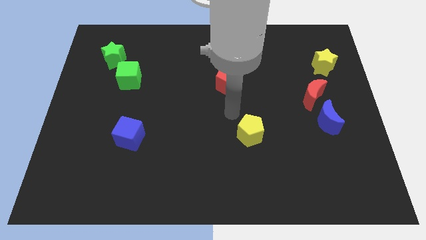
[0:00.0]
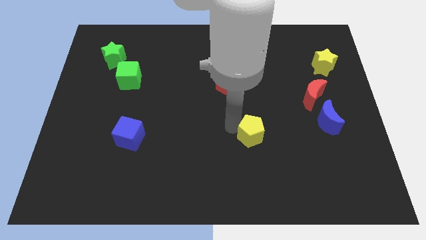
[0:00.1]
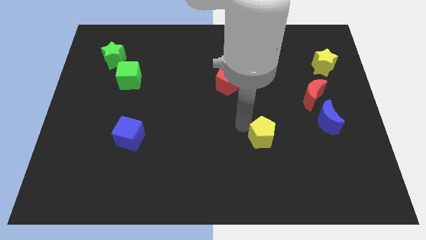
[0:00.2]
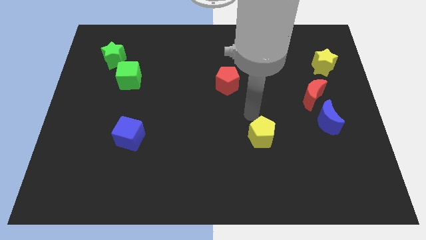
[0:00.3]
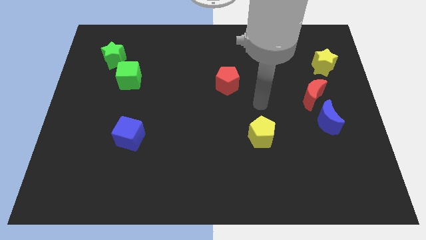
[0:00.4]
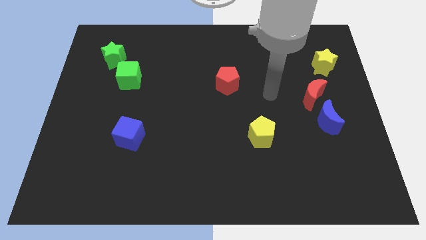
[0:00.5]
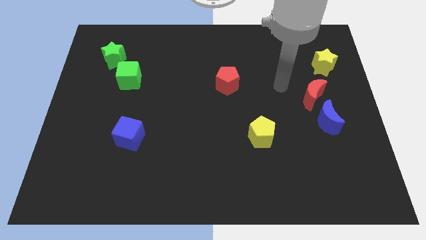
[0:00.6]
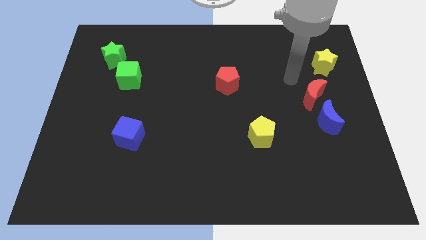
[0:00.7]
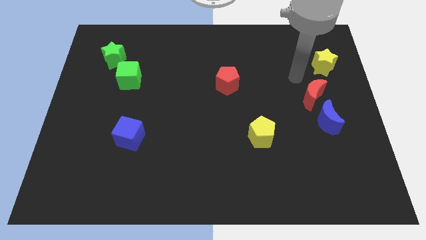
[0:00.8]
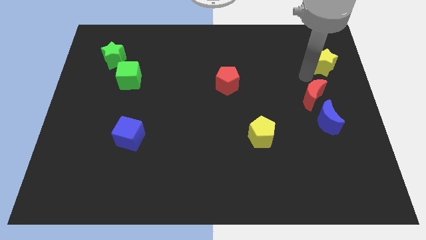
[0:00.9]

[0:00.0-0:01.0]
tap the yellow pentagon

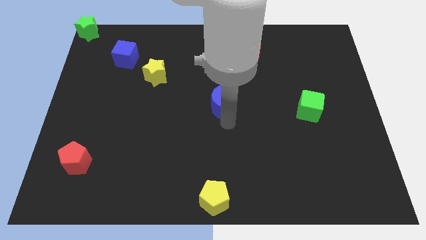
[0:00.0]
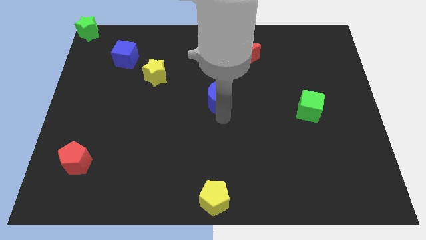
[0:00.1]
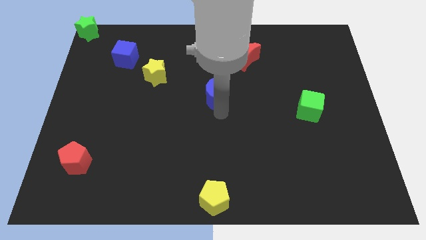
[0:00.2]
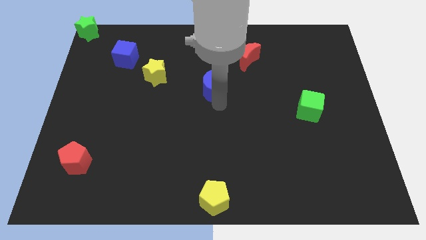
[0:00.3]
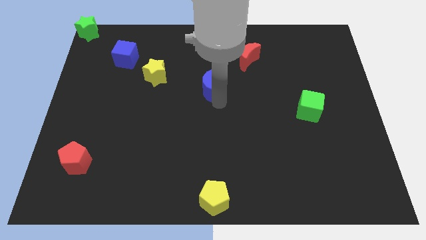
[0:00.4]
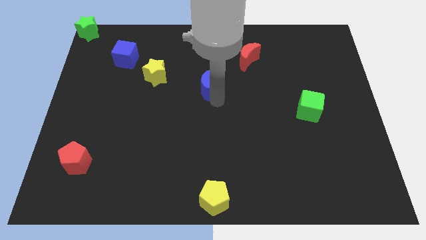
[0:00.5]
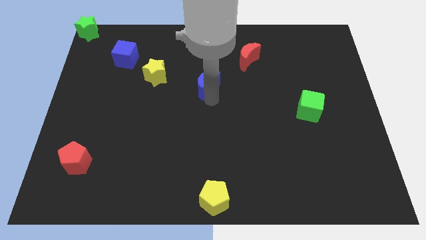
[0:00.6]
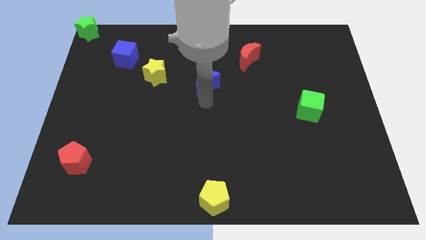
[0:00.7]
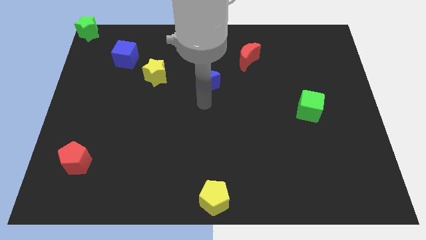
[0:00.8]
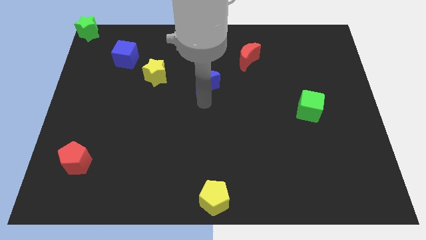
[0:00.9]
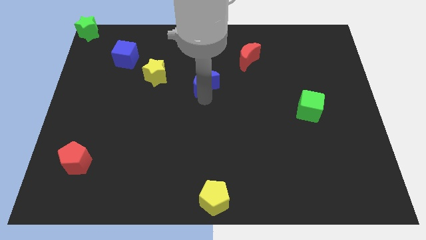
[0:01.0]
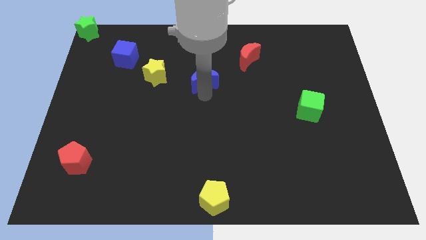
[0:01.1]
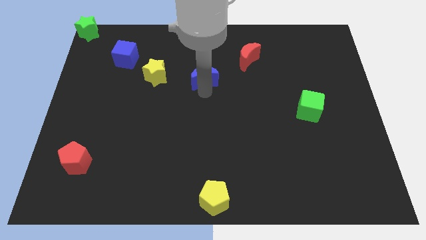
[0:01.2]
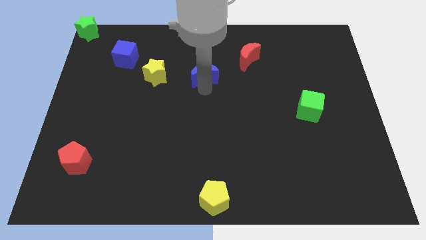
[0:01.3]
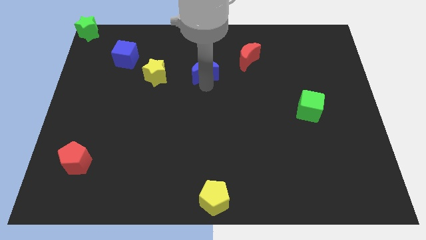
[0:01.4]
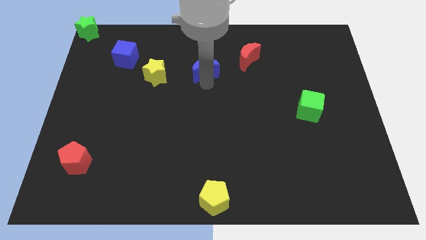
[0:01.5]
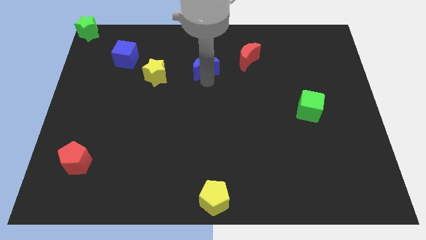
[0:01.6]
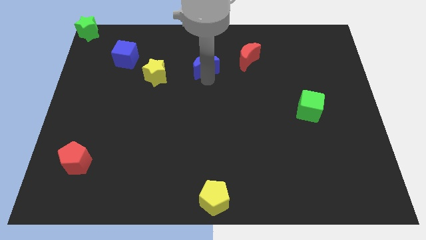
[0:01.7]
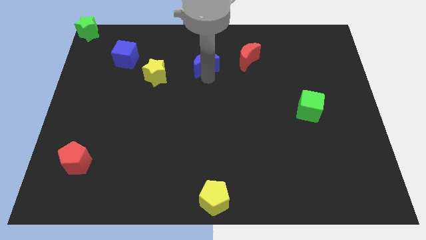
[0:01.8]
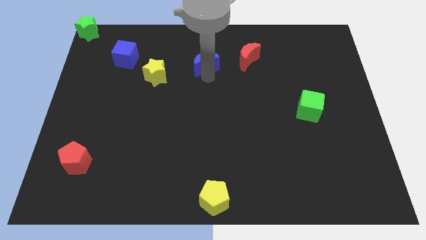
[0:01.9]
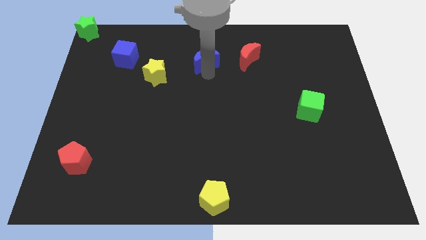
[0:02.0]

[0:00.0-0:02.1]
move the blue crescent to left side of red crescent

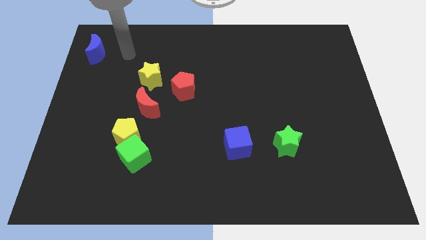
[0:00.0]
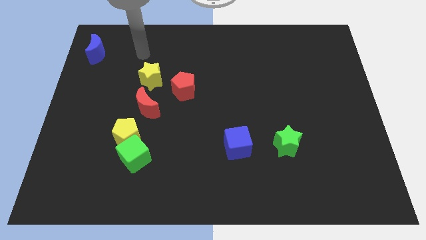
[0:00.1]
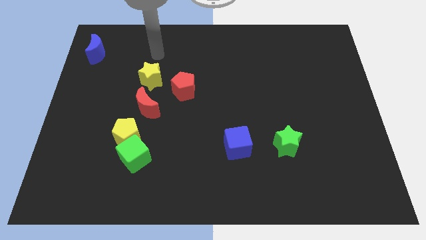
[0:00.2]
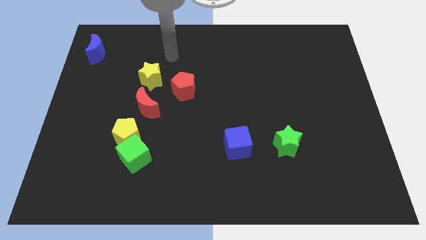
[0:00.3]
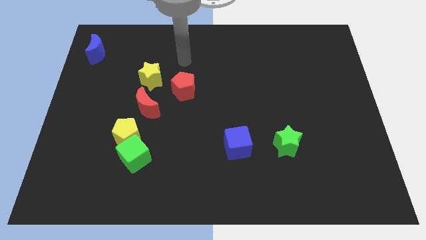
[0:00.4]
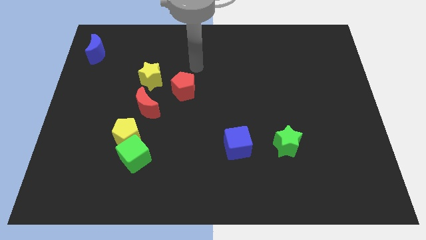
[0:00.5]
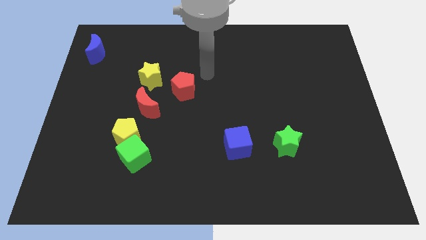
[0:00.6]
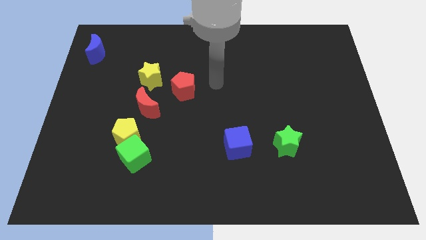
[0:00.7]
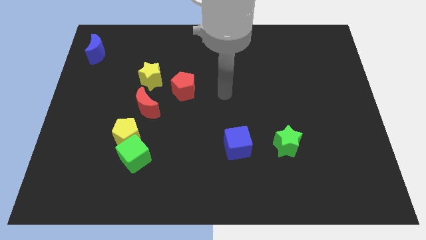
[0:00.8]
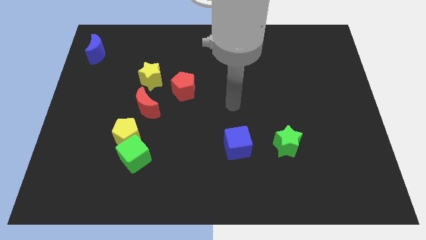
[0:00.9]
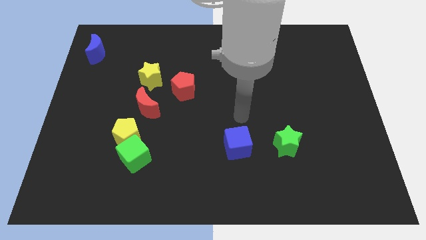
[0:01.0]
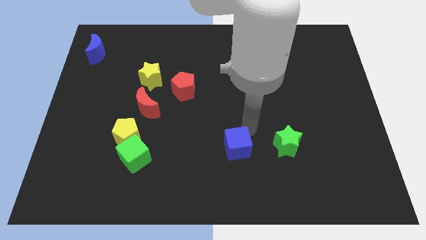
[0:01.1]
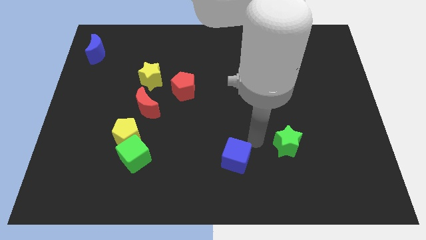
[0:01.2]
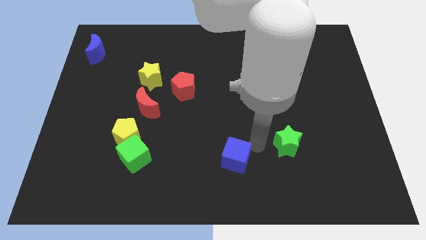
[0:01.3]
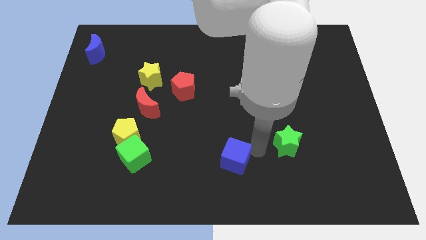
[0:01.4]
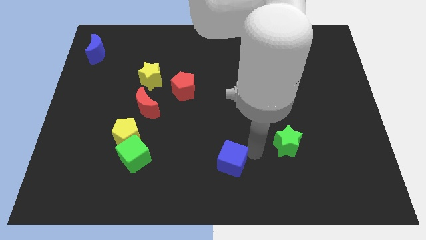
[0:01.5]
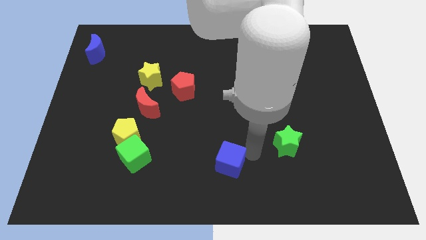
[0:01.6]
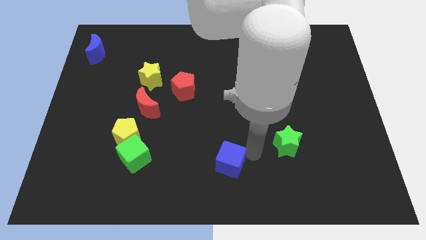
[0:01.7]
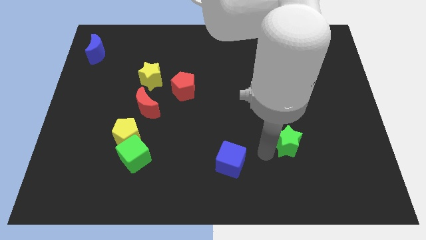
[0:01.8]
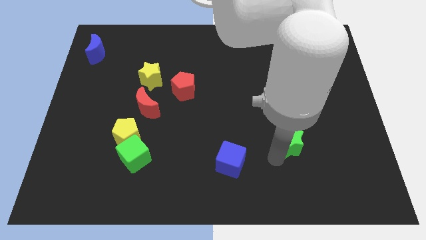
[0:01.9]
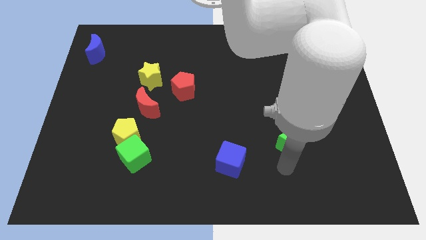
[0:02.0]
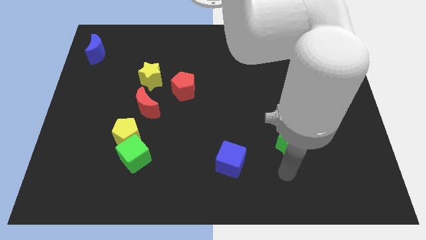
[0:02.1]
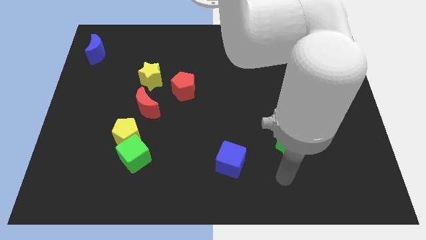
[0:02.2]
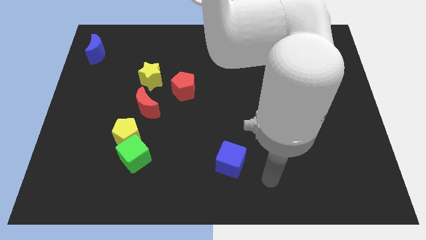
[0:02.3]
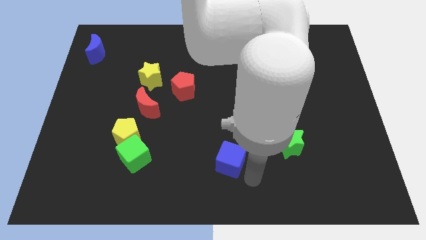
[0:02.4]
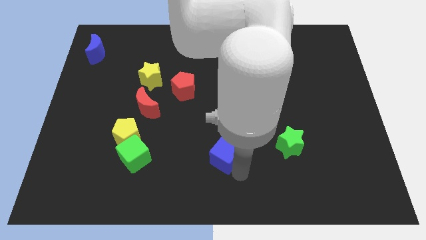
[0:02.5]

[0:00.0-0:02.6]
point your arm below blue cube

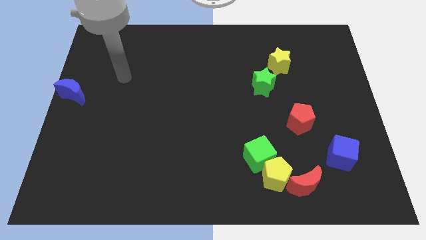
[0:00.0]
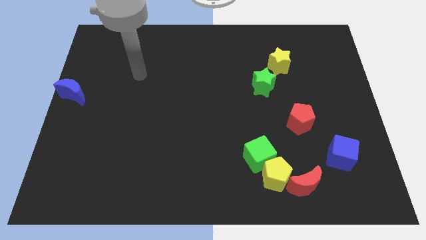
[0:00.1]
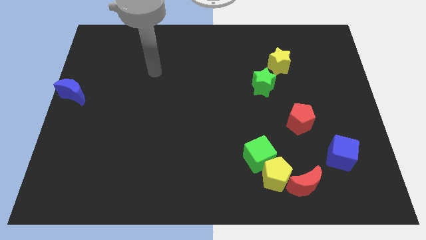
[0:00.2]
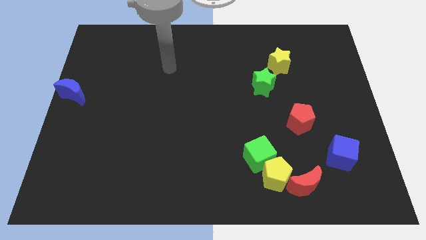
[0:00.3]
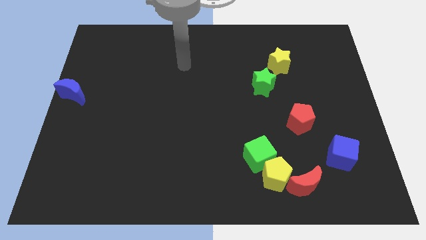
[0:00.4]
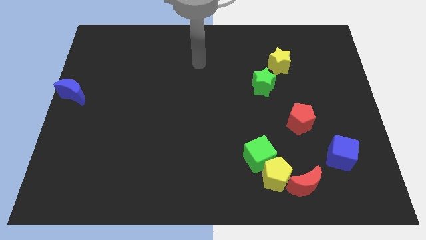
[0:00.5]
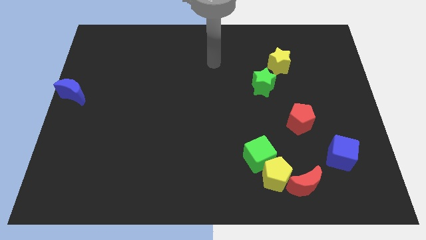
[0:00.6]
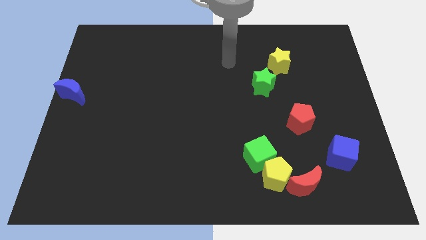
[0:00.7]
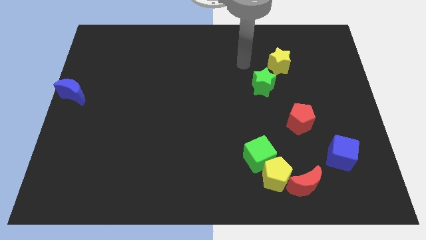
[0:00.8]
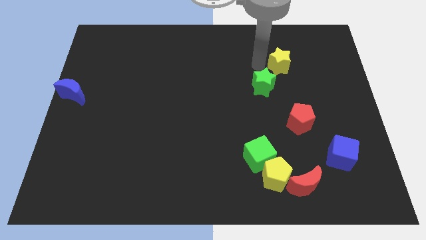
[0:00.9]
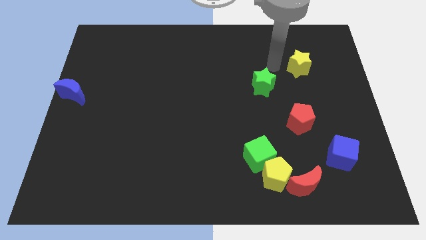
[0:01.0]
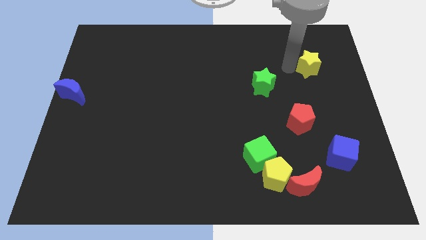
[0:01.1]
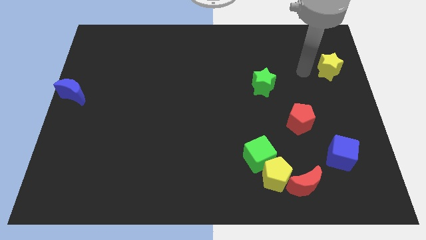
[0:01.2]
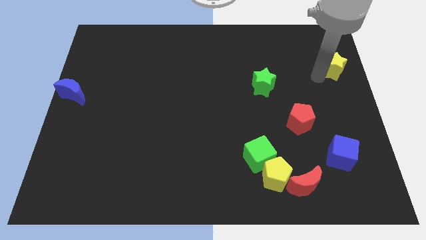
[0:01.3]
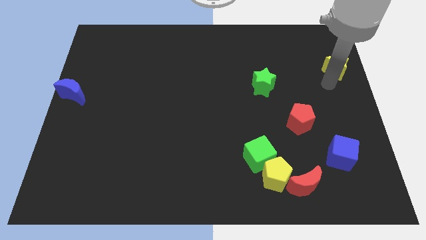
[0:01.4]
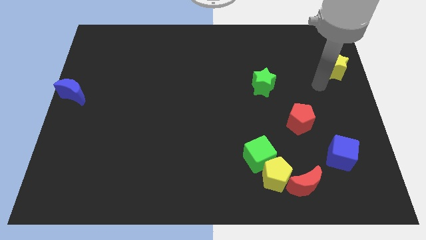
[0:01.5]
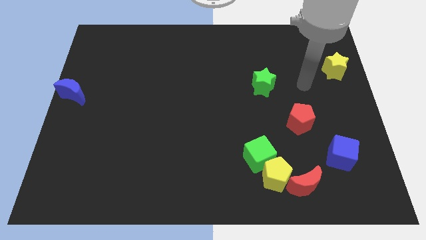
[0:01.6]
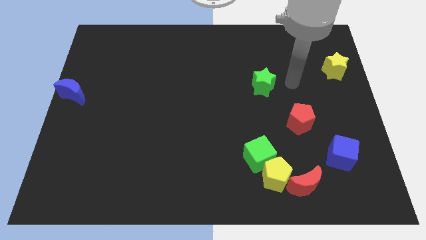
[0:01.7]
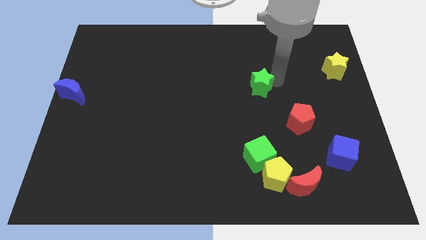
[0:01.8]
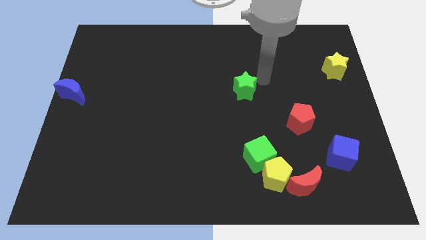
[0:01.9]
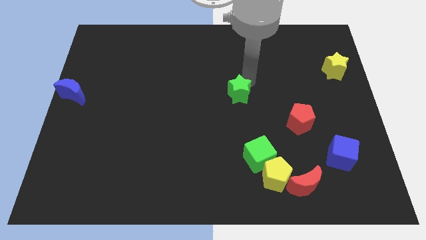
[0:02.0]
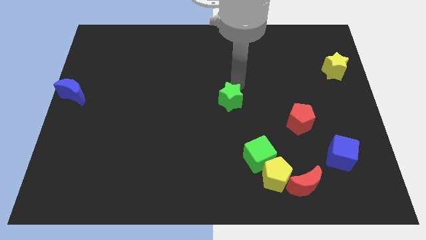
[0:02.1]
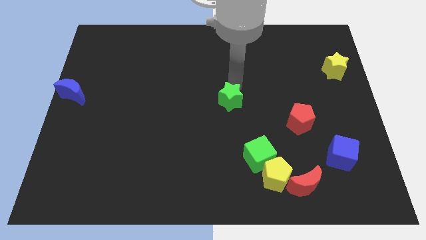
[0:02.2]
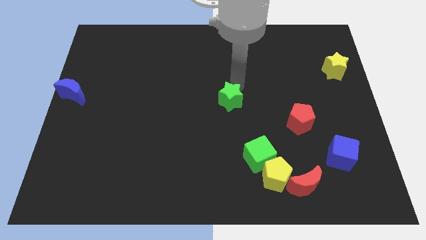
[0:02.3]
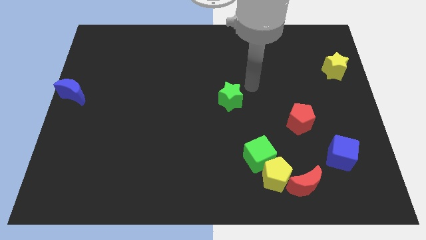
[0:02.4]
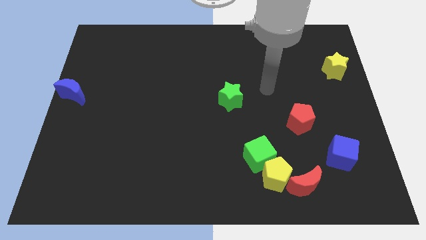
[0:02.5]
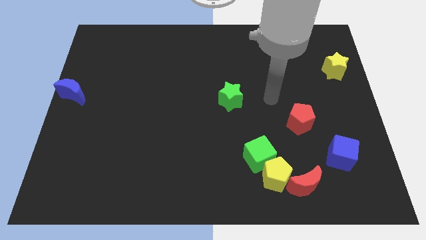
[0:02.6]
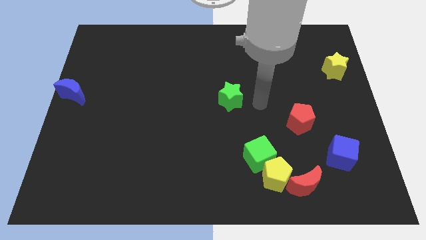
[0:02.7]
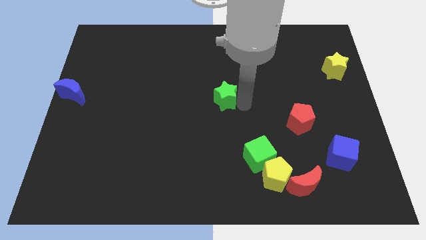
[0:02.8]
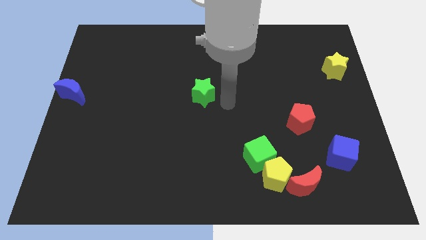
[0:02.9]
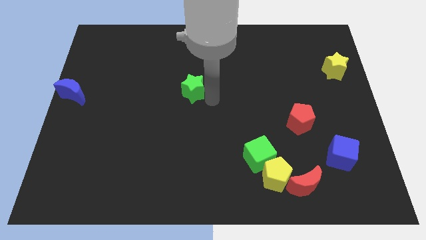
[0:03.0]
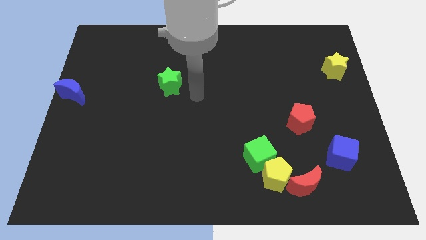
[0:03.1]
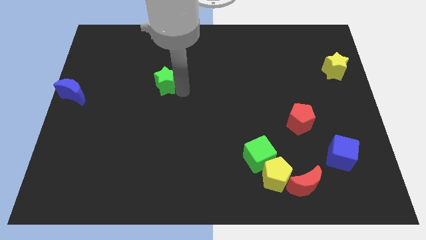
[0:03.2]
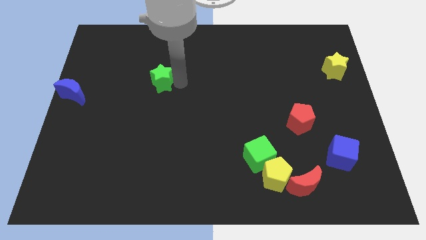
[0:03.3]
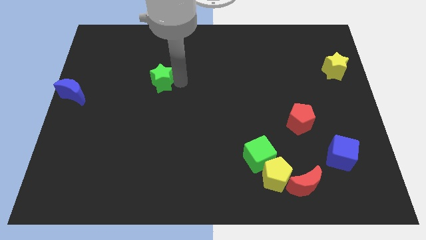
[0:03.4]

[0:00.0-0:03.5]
push the green star to the right of the blue crescent
